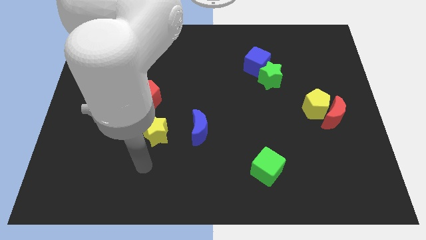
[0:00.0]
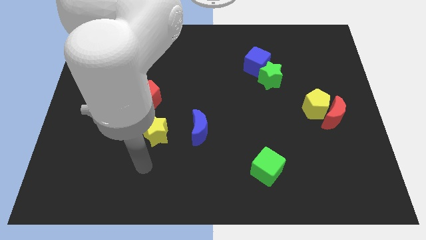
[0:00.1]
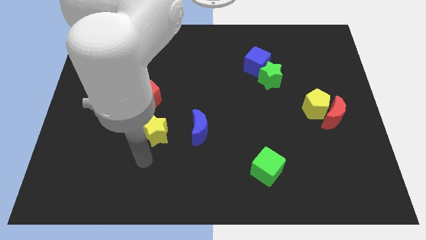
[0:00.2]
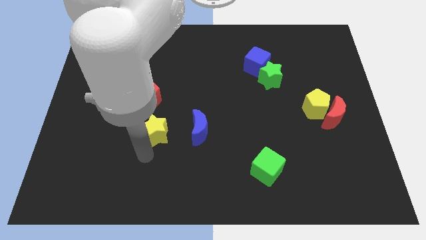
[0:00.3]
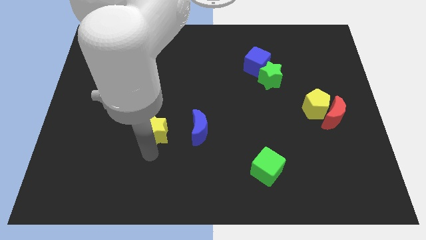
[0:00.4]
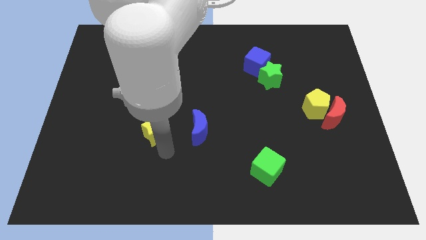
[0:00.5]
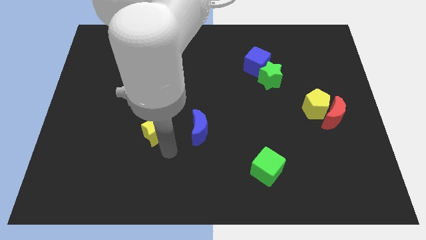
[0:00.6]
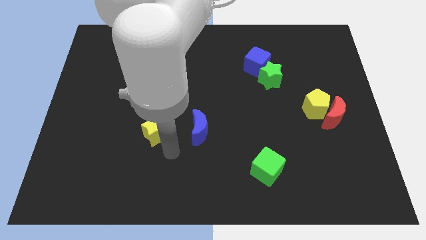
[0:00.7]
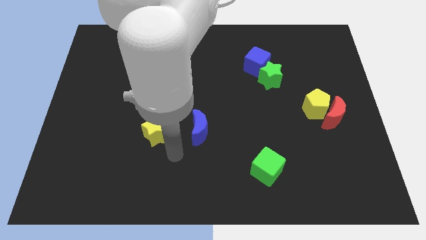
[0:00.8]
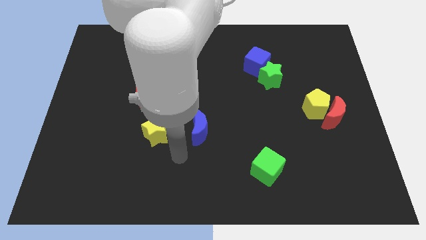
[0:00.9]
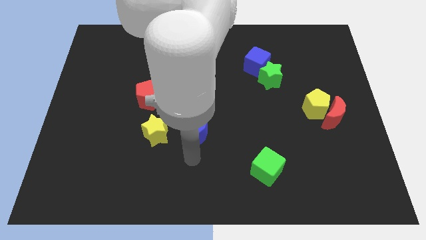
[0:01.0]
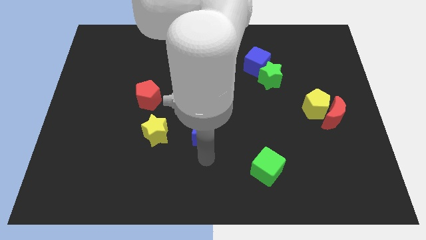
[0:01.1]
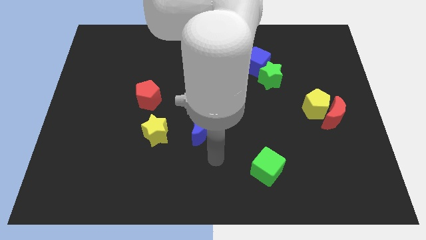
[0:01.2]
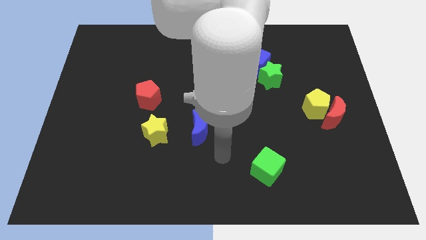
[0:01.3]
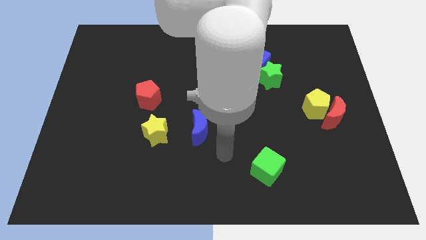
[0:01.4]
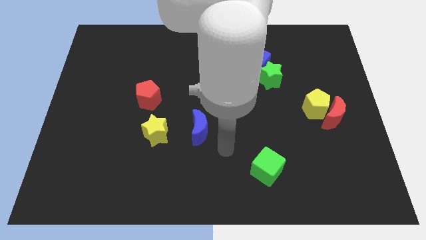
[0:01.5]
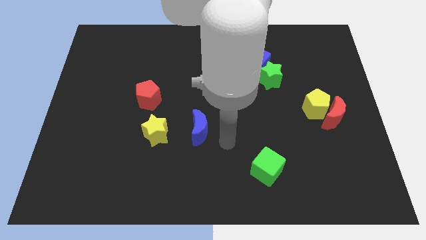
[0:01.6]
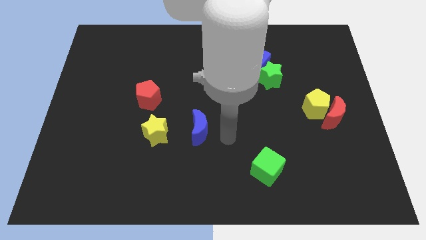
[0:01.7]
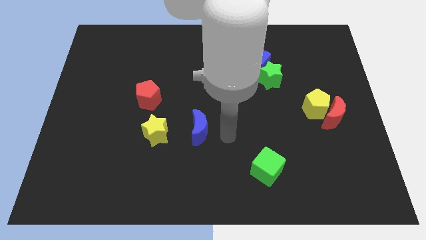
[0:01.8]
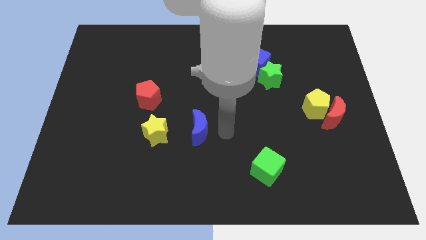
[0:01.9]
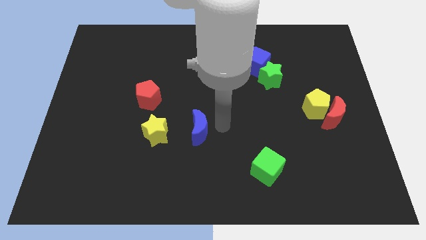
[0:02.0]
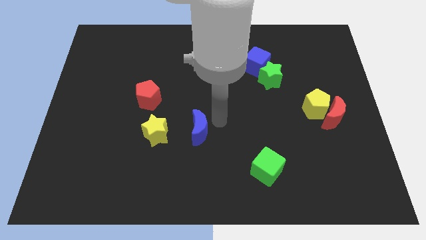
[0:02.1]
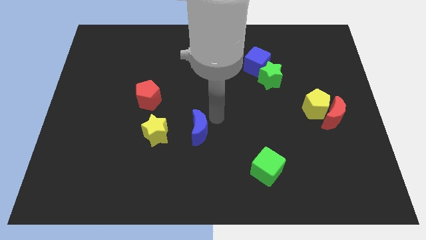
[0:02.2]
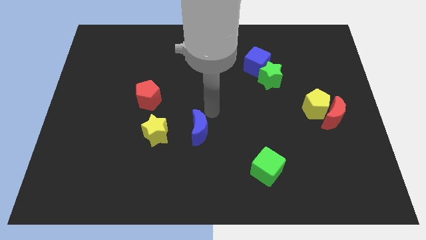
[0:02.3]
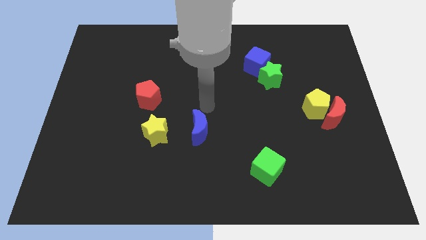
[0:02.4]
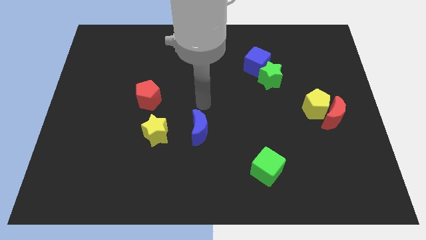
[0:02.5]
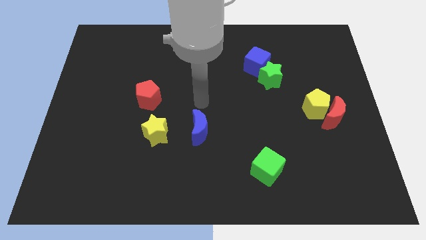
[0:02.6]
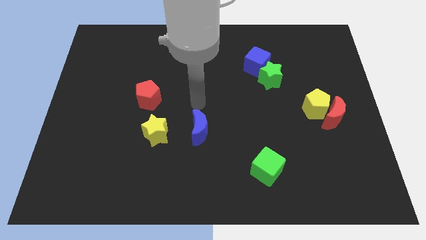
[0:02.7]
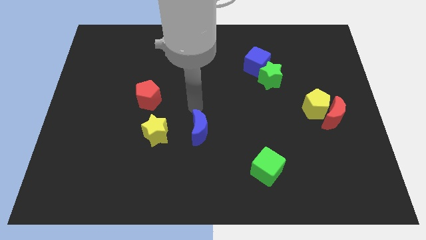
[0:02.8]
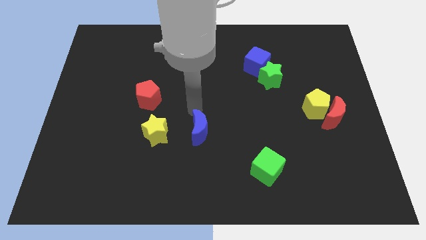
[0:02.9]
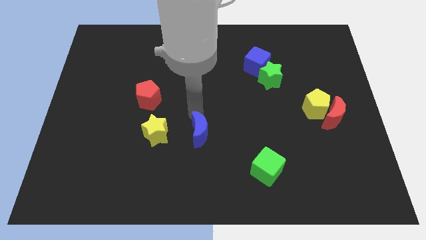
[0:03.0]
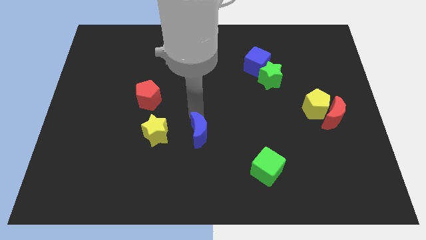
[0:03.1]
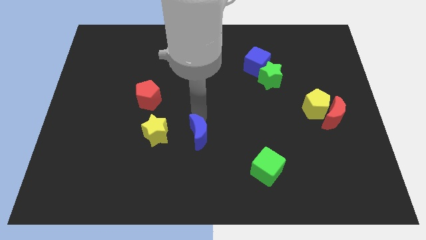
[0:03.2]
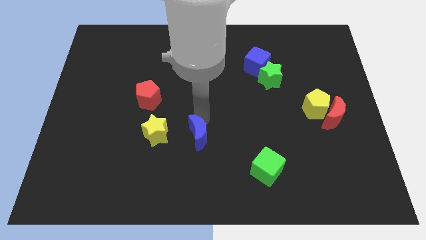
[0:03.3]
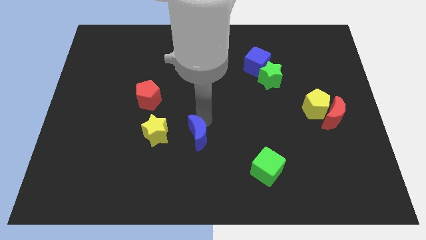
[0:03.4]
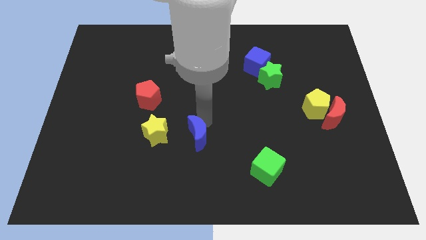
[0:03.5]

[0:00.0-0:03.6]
move the blue moon slightly to the bottom

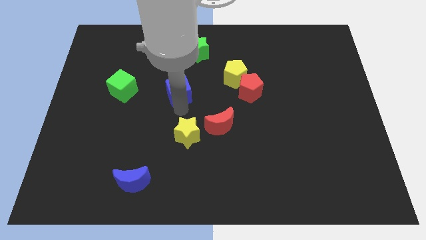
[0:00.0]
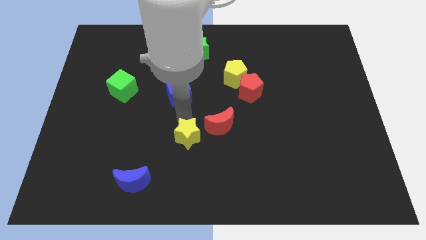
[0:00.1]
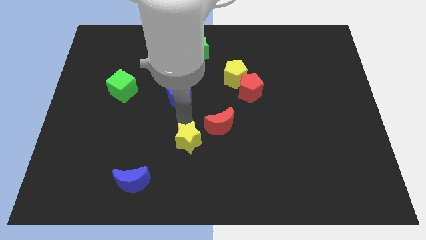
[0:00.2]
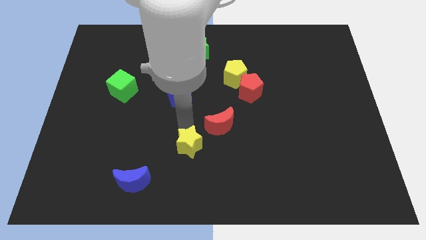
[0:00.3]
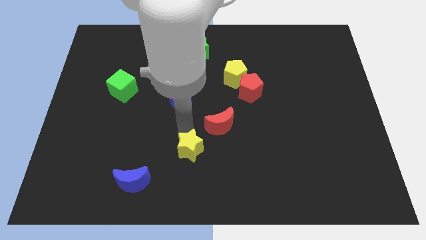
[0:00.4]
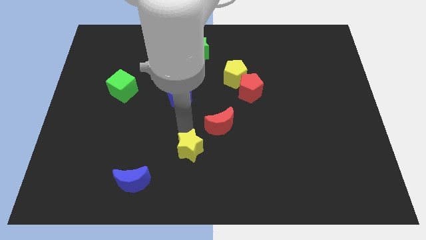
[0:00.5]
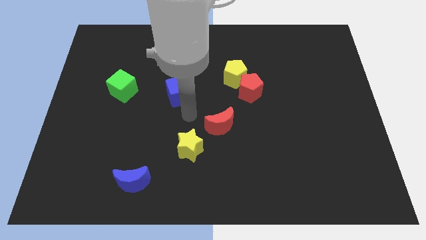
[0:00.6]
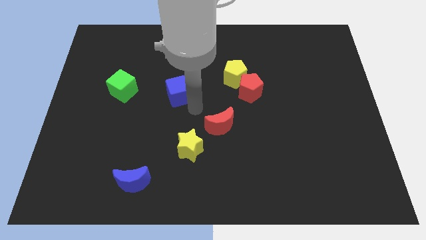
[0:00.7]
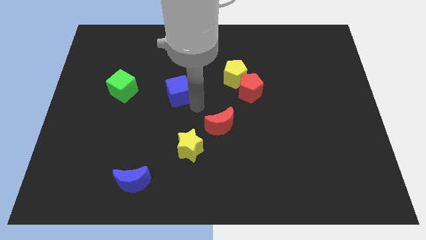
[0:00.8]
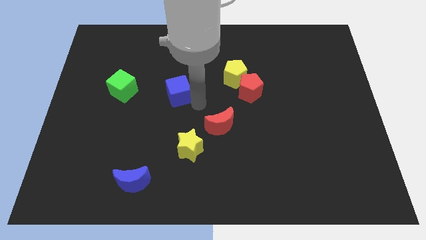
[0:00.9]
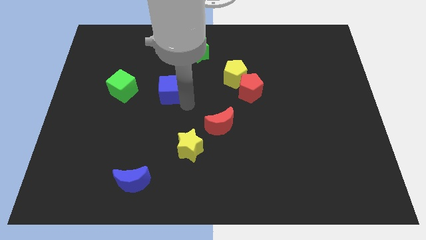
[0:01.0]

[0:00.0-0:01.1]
push the yellow star towards the bottom side

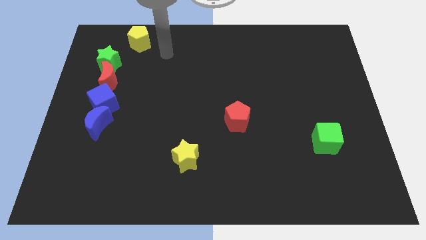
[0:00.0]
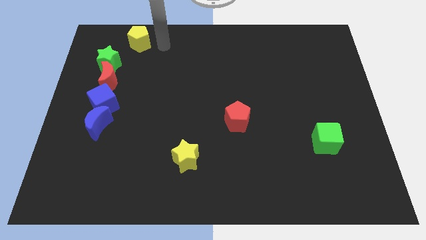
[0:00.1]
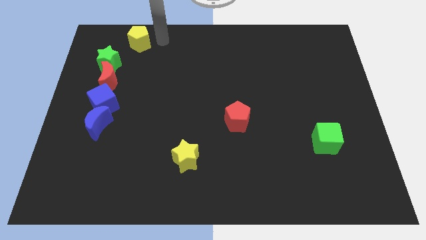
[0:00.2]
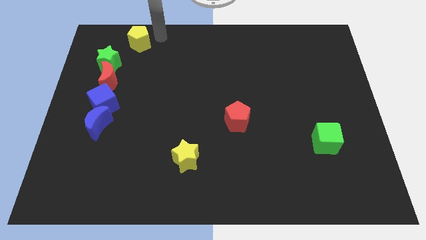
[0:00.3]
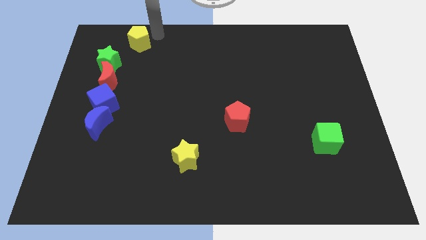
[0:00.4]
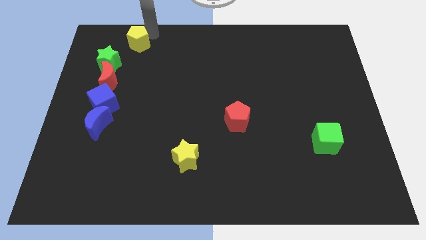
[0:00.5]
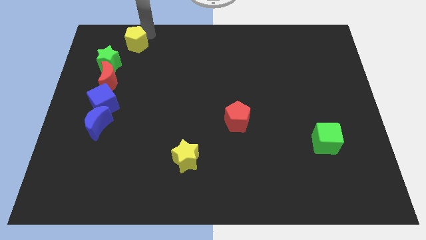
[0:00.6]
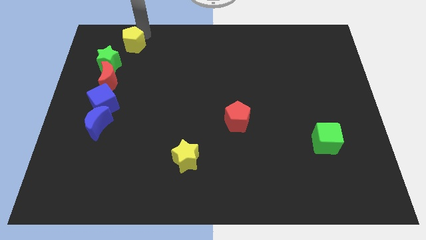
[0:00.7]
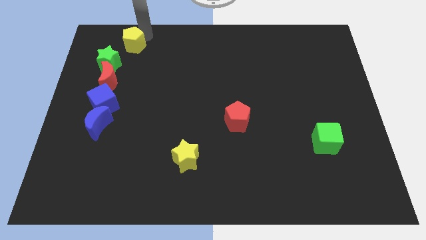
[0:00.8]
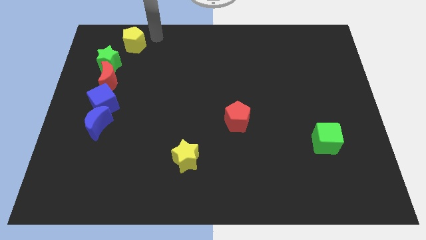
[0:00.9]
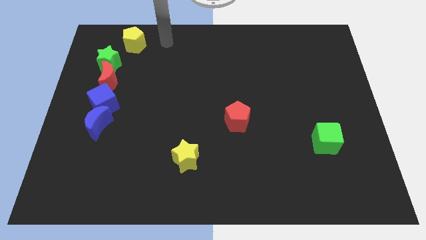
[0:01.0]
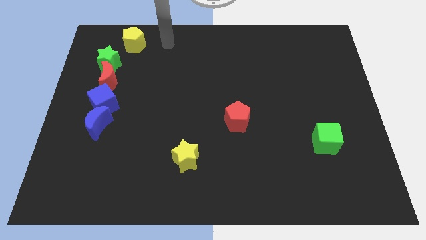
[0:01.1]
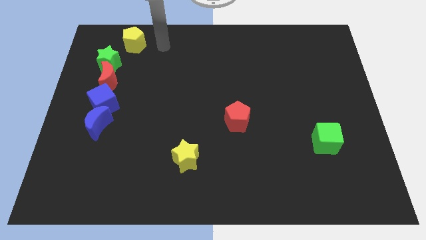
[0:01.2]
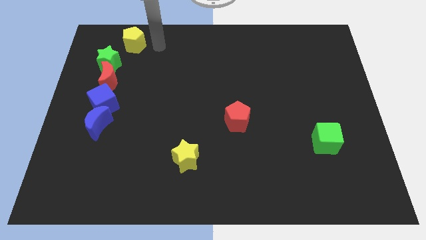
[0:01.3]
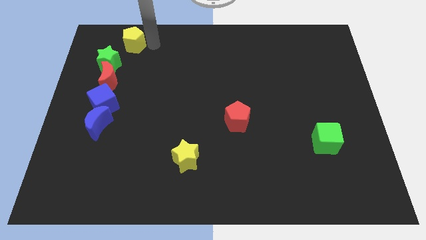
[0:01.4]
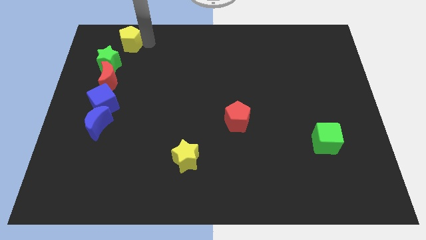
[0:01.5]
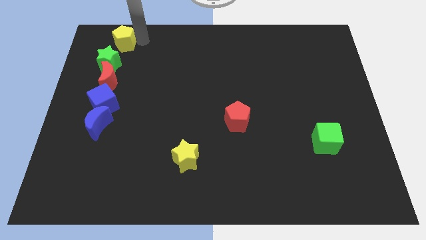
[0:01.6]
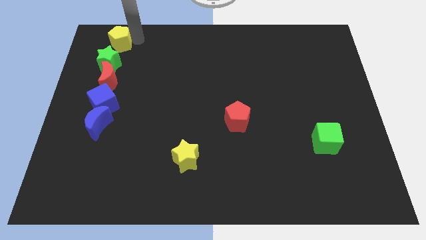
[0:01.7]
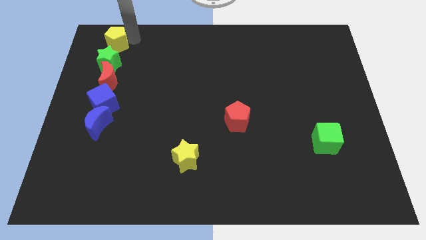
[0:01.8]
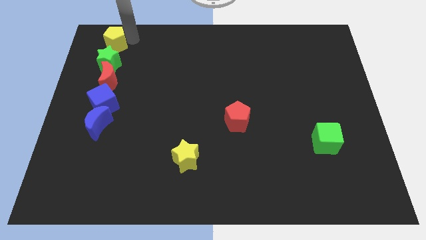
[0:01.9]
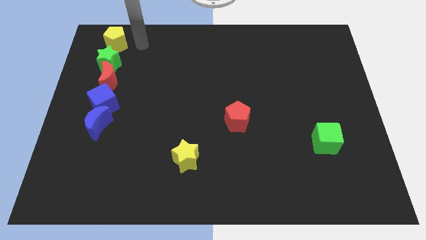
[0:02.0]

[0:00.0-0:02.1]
place the yellow pentagon above the green star

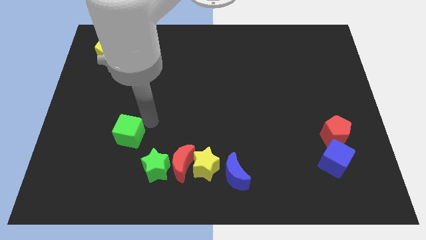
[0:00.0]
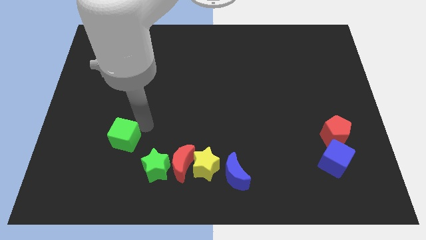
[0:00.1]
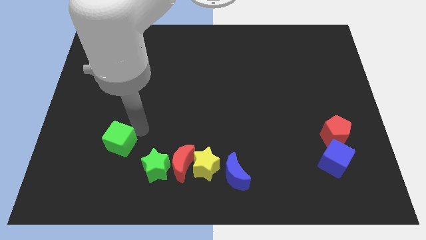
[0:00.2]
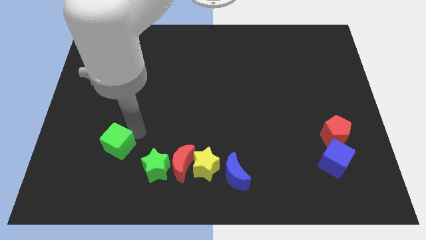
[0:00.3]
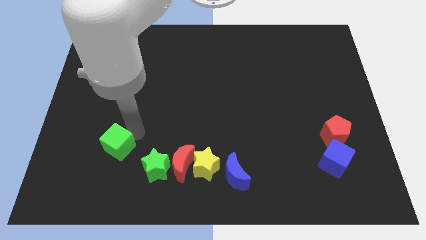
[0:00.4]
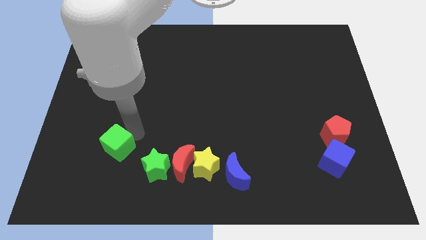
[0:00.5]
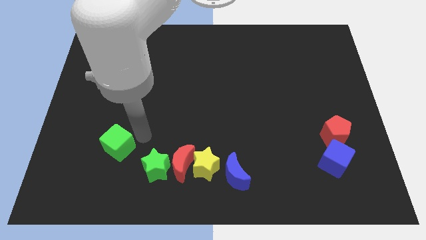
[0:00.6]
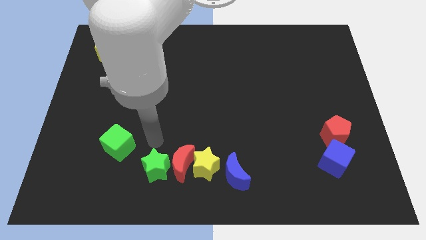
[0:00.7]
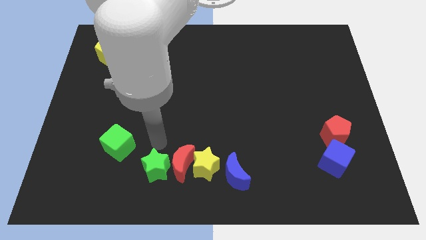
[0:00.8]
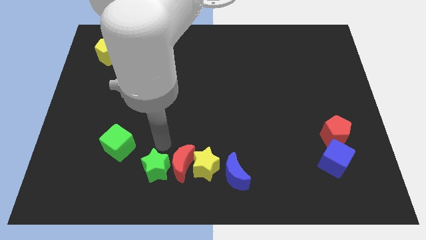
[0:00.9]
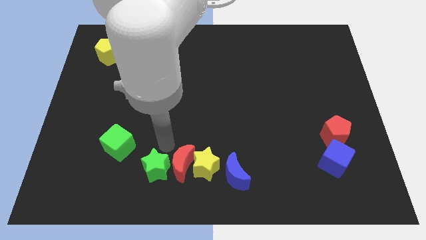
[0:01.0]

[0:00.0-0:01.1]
push the green cube towards the bottom left corner of the board

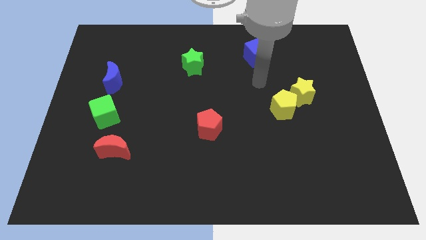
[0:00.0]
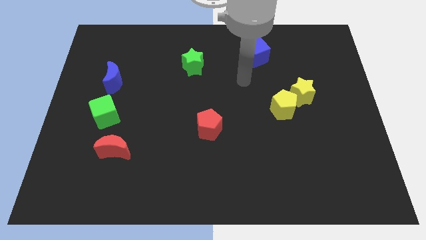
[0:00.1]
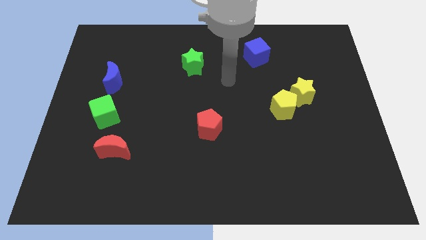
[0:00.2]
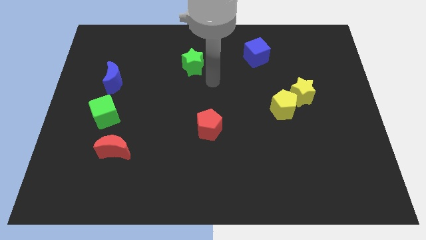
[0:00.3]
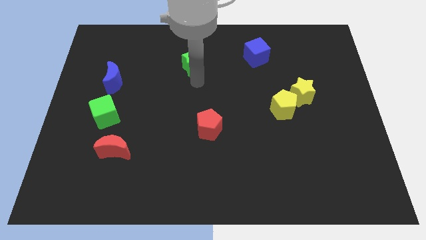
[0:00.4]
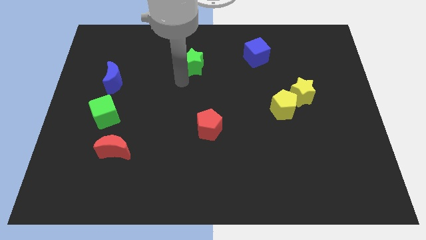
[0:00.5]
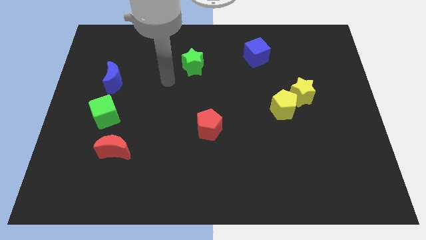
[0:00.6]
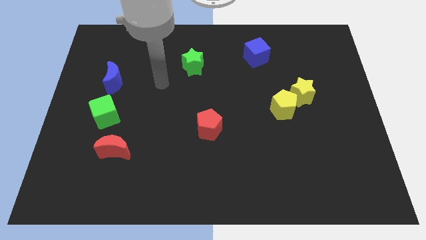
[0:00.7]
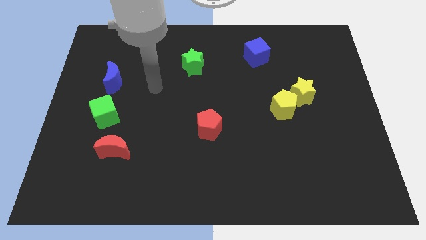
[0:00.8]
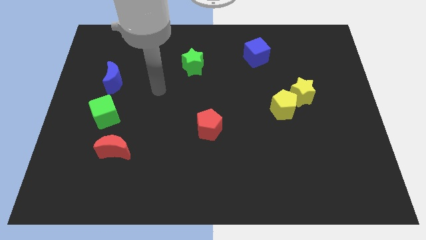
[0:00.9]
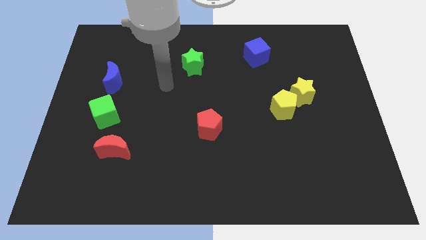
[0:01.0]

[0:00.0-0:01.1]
move your arm to the left
